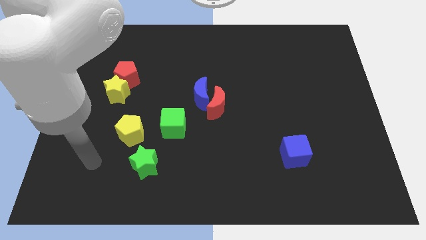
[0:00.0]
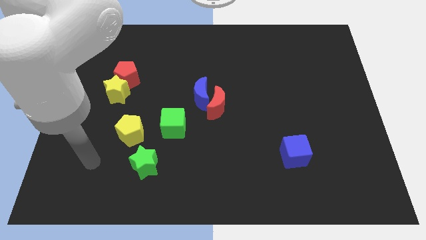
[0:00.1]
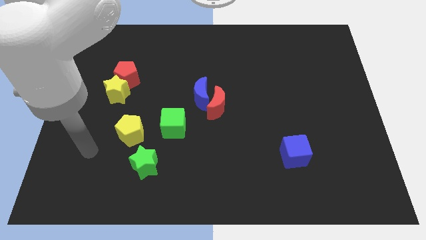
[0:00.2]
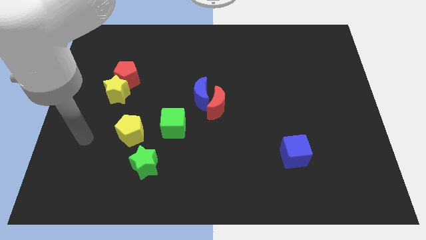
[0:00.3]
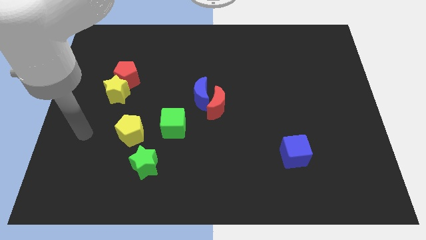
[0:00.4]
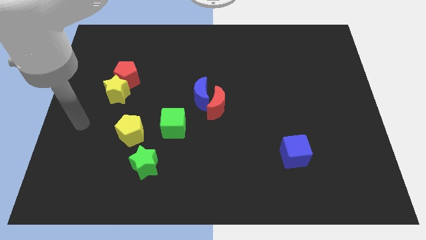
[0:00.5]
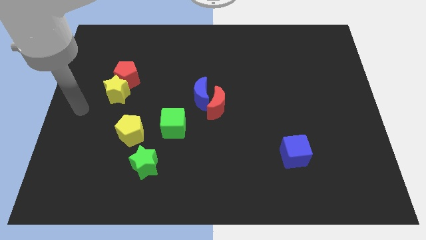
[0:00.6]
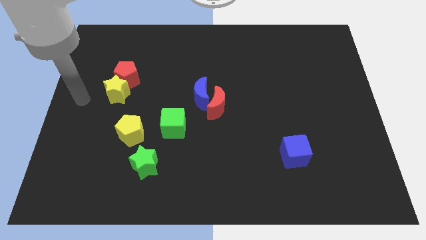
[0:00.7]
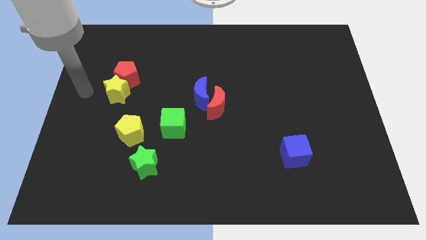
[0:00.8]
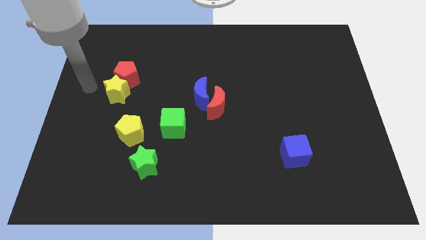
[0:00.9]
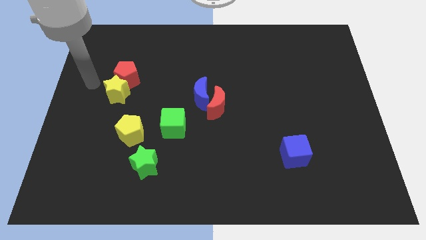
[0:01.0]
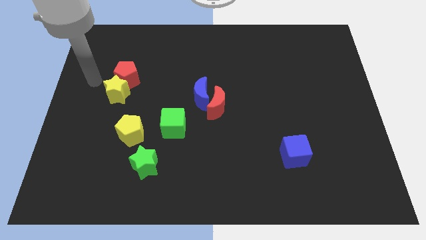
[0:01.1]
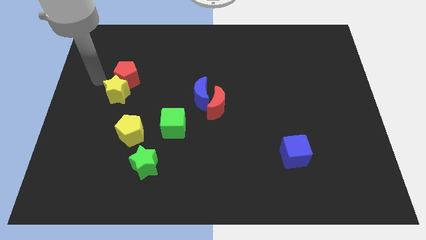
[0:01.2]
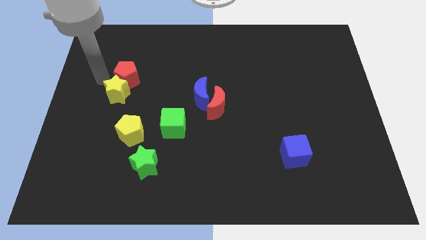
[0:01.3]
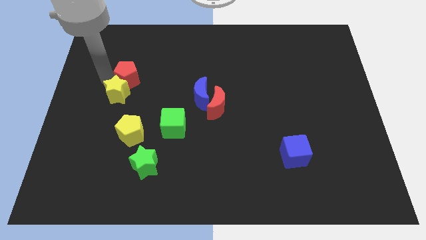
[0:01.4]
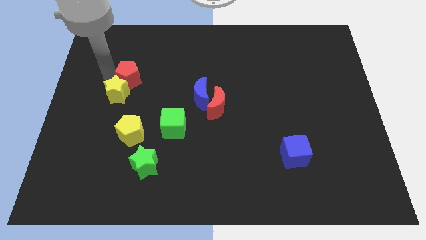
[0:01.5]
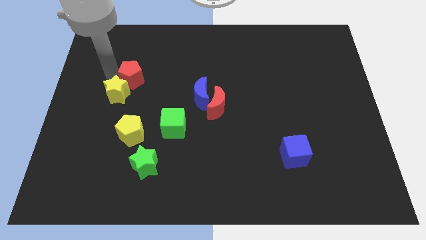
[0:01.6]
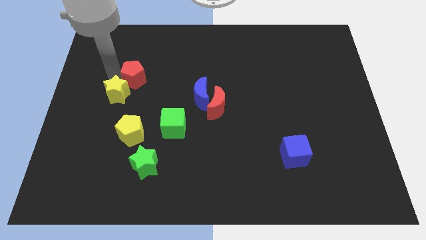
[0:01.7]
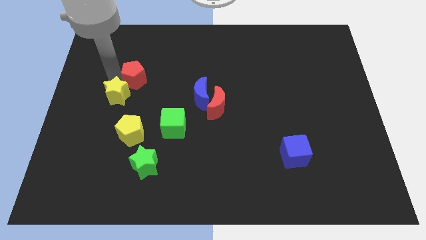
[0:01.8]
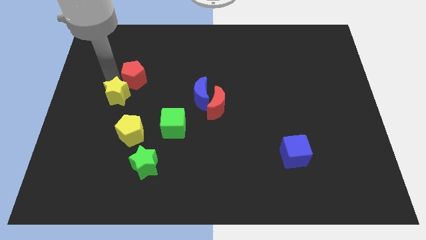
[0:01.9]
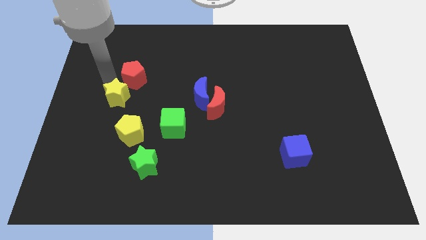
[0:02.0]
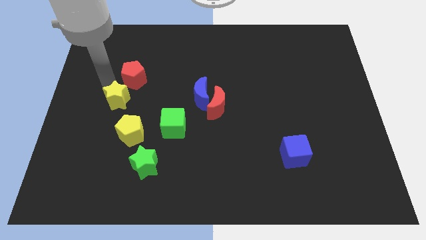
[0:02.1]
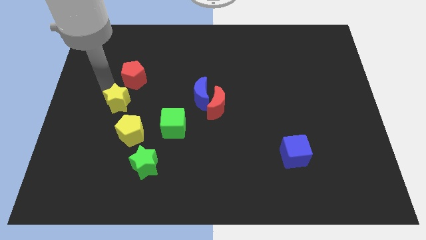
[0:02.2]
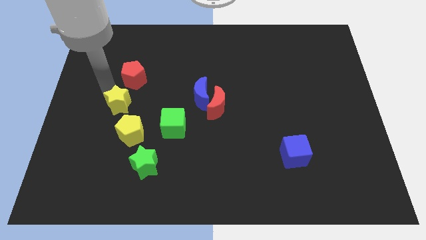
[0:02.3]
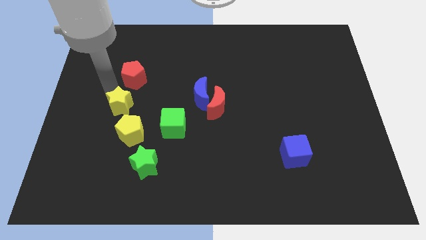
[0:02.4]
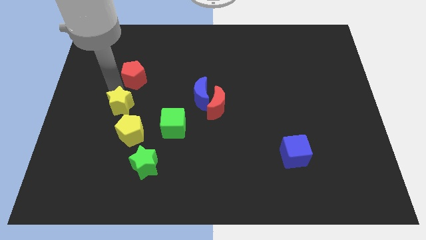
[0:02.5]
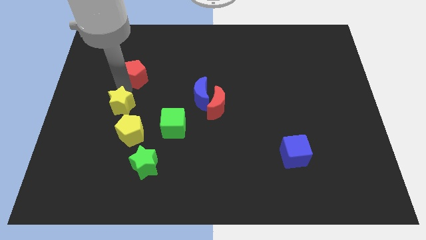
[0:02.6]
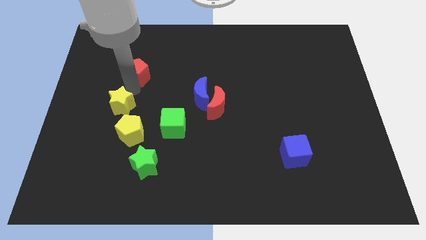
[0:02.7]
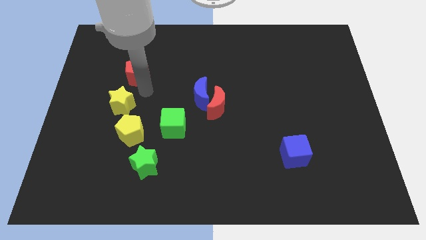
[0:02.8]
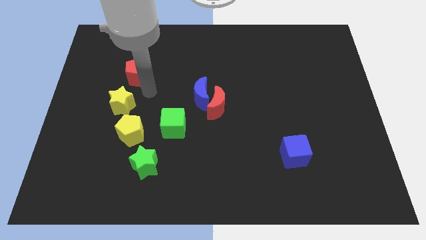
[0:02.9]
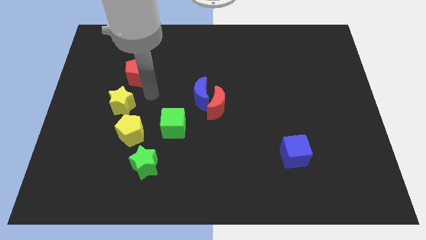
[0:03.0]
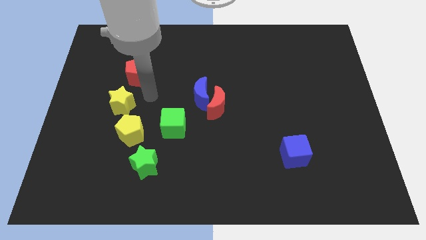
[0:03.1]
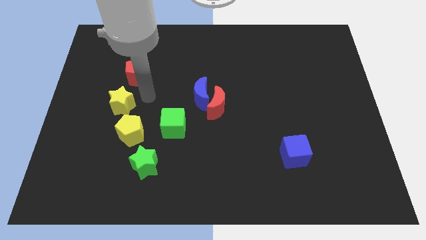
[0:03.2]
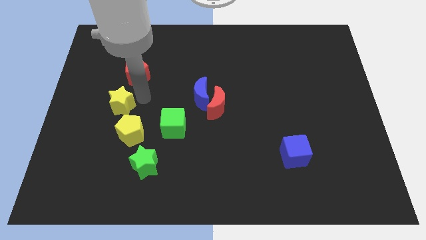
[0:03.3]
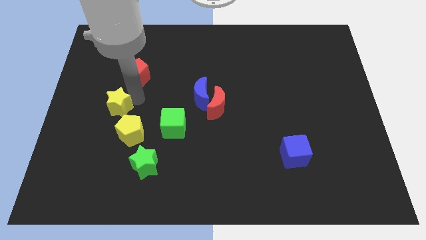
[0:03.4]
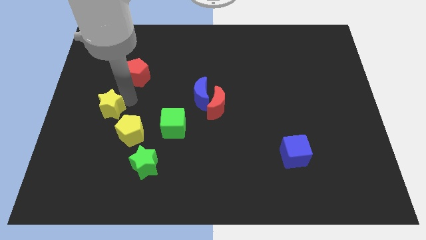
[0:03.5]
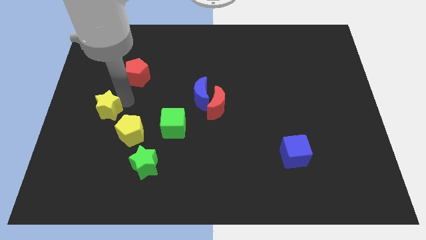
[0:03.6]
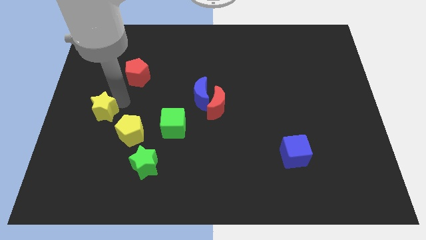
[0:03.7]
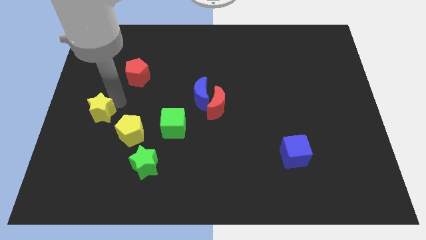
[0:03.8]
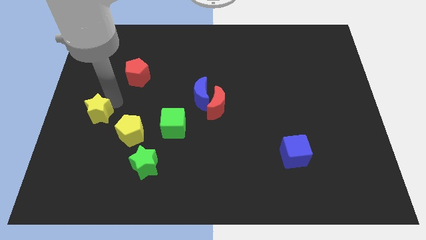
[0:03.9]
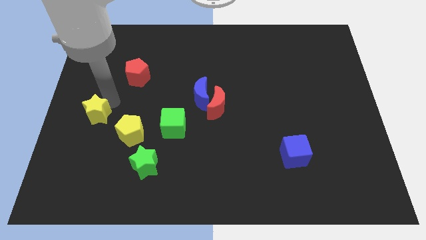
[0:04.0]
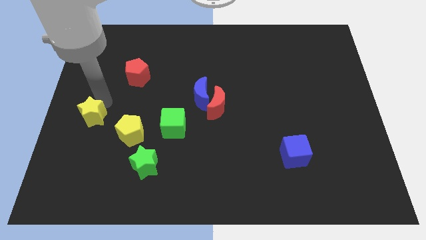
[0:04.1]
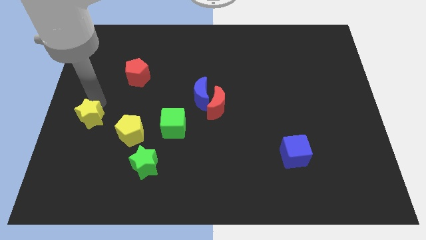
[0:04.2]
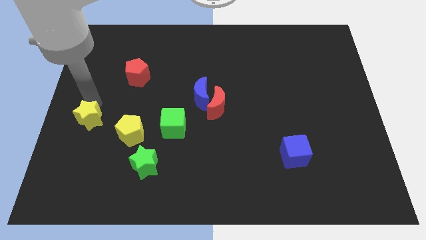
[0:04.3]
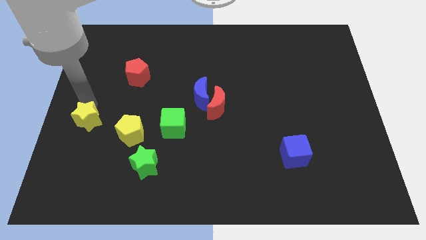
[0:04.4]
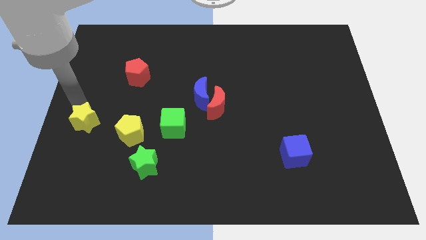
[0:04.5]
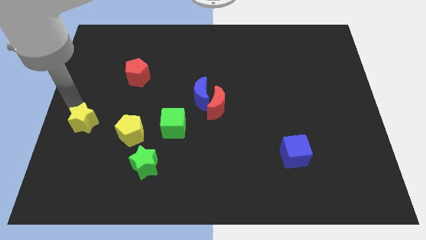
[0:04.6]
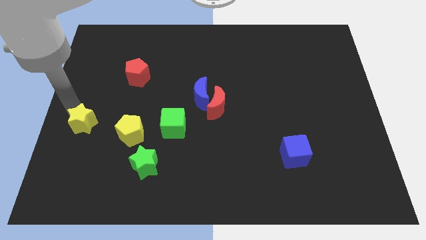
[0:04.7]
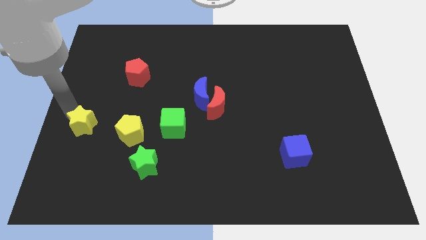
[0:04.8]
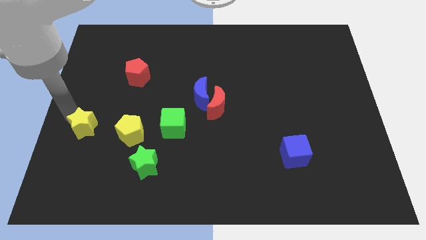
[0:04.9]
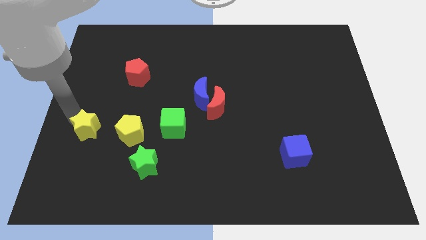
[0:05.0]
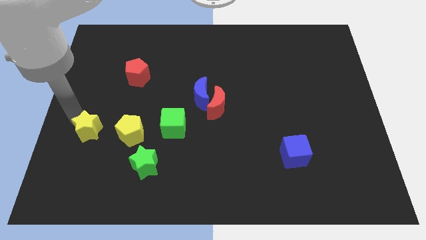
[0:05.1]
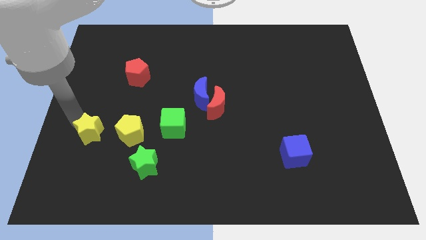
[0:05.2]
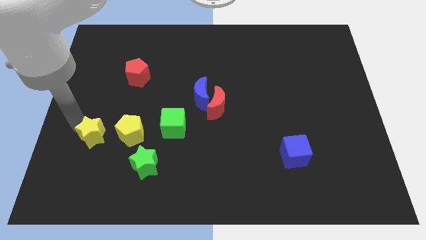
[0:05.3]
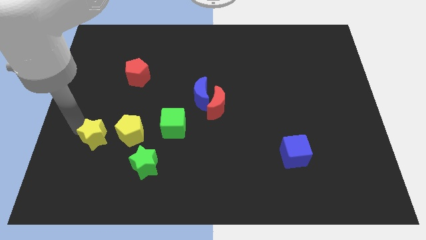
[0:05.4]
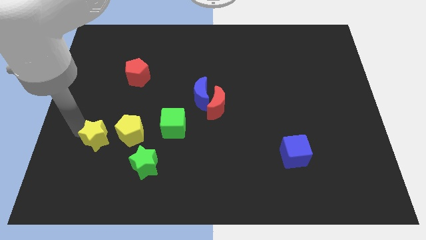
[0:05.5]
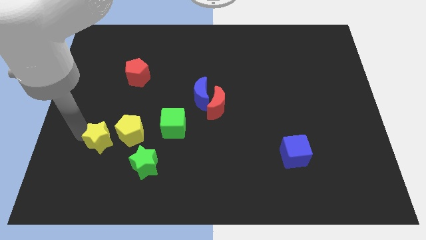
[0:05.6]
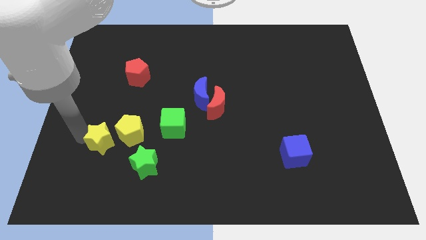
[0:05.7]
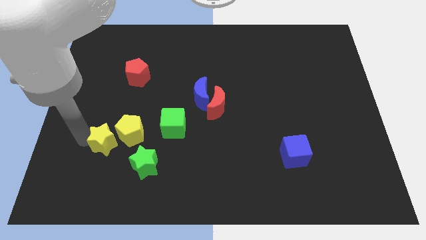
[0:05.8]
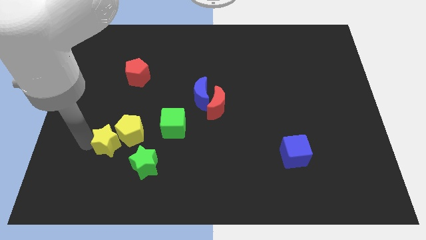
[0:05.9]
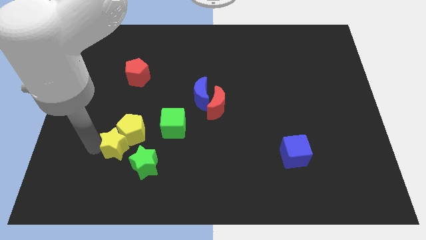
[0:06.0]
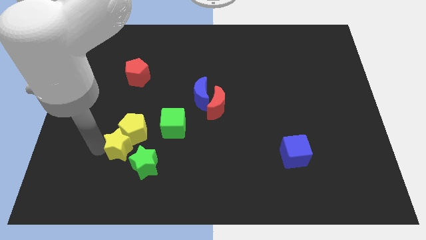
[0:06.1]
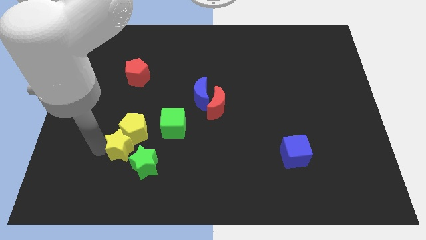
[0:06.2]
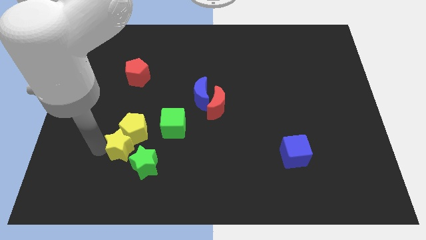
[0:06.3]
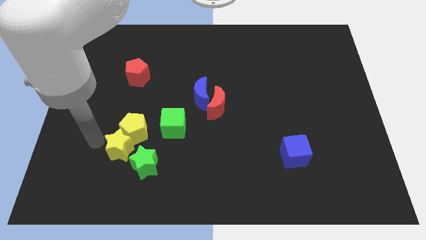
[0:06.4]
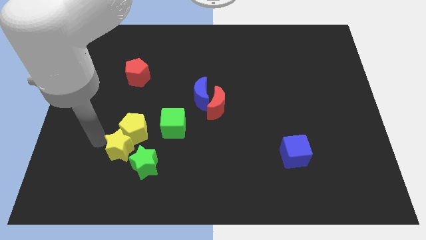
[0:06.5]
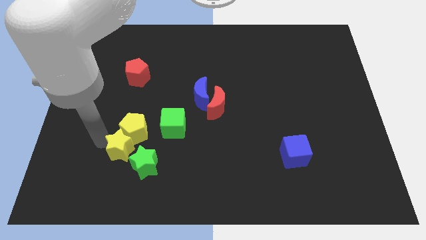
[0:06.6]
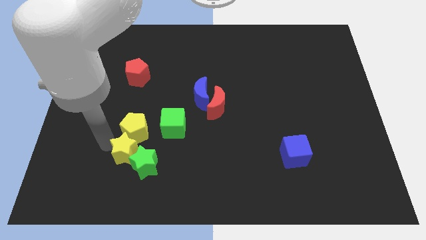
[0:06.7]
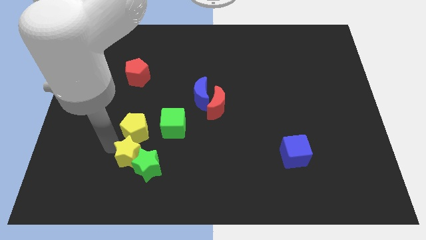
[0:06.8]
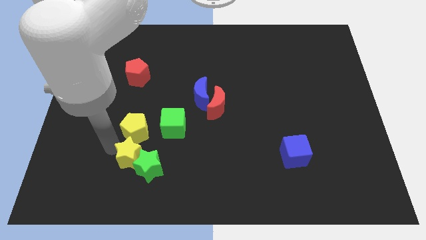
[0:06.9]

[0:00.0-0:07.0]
slide the yellow star to the green star

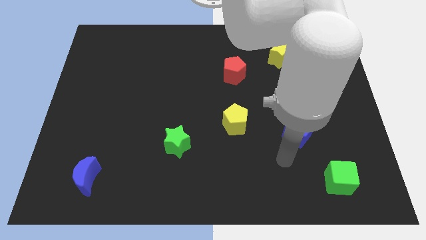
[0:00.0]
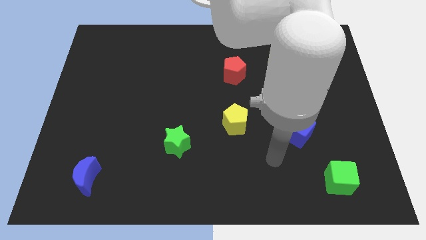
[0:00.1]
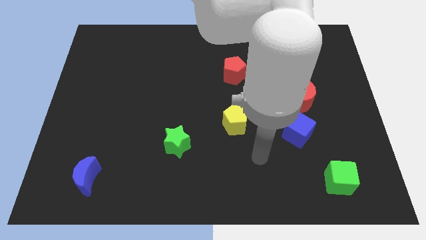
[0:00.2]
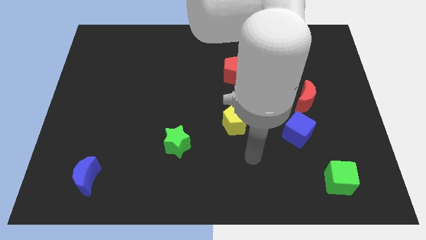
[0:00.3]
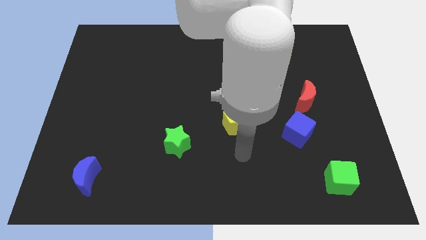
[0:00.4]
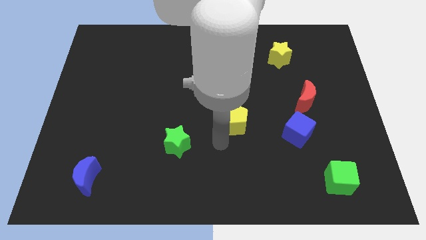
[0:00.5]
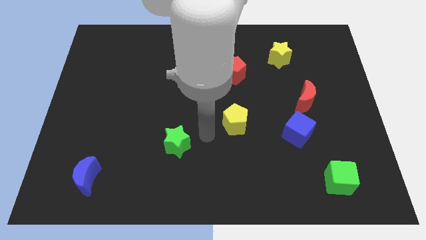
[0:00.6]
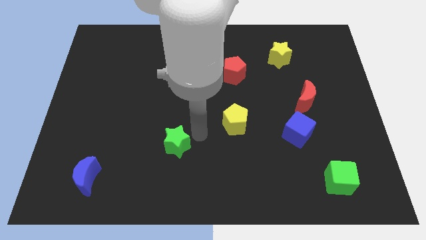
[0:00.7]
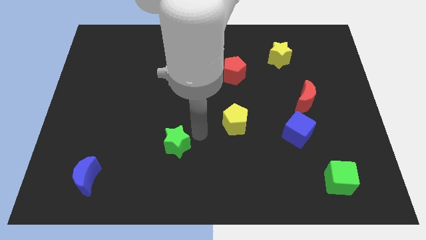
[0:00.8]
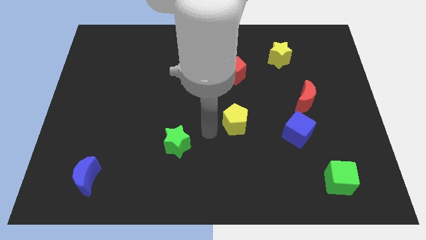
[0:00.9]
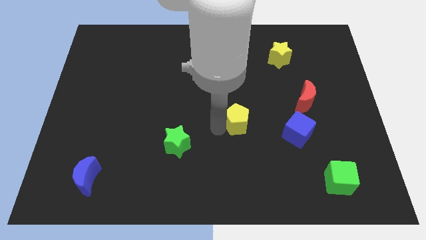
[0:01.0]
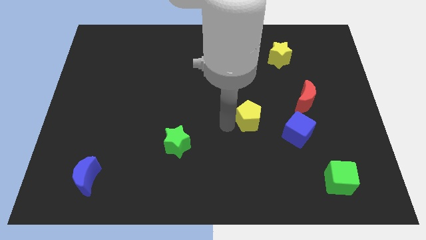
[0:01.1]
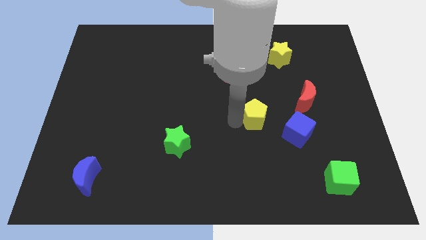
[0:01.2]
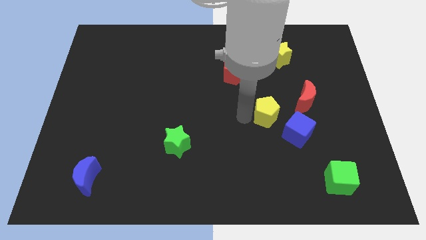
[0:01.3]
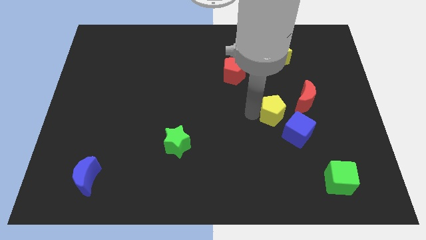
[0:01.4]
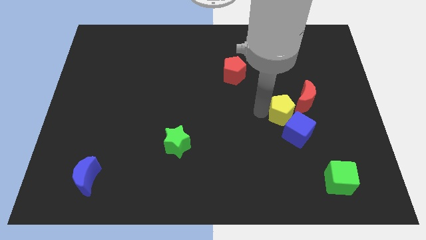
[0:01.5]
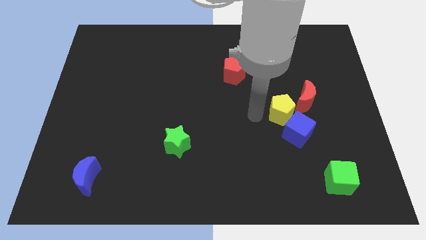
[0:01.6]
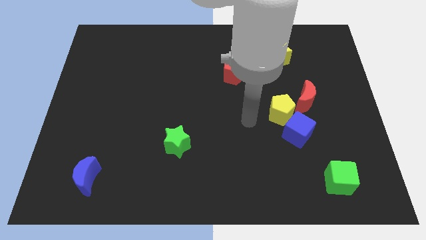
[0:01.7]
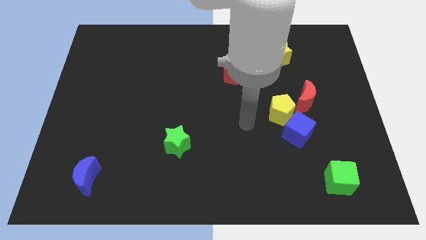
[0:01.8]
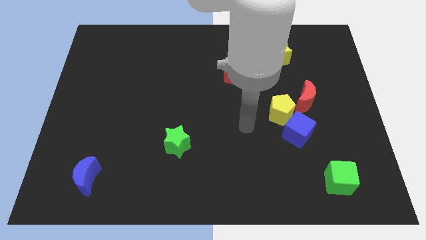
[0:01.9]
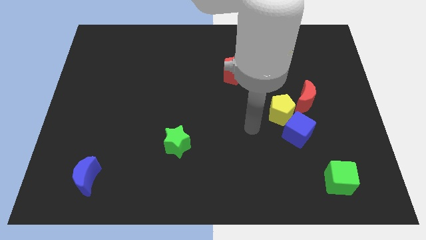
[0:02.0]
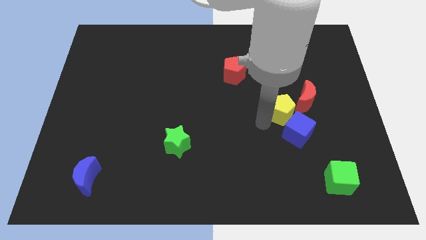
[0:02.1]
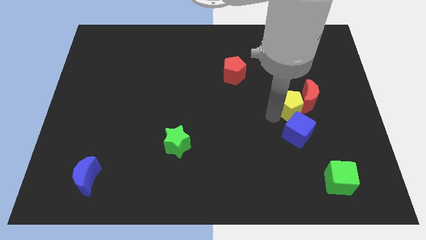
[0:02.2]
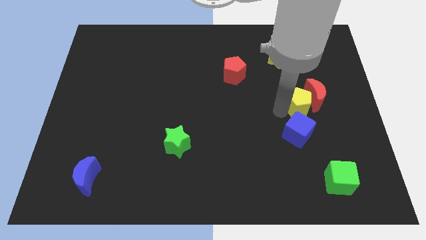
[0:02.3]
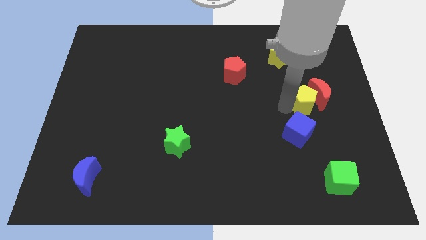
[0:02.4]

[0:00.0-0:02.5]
put the yellow pentagon towards the red moon
